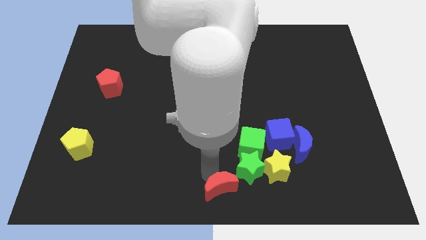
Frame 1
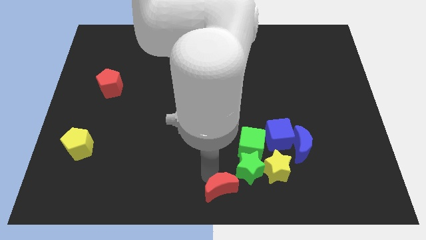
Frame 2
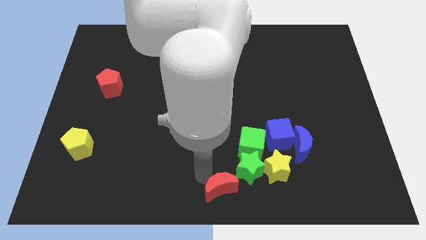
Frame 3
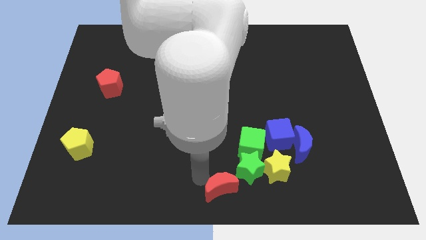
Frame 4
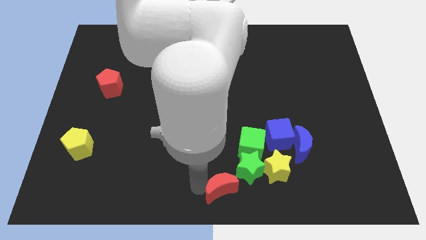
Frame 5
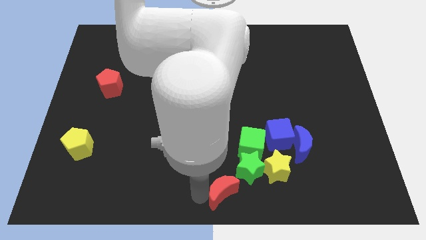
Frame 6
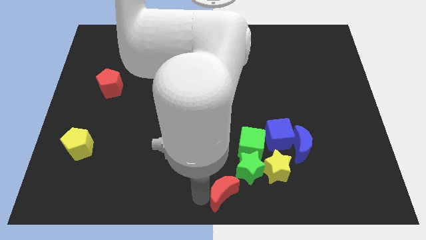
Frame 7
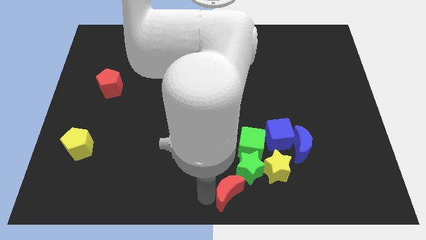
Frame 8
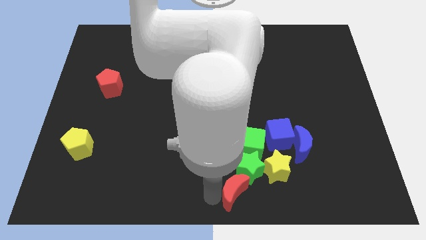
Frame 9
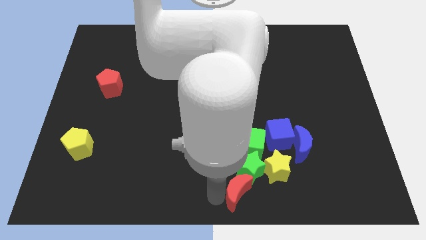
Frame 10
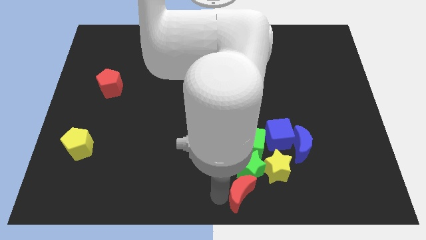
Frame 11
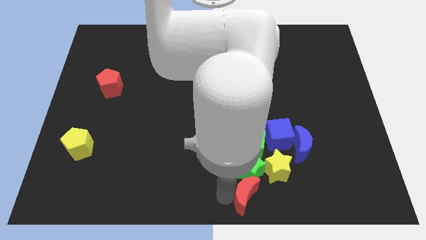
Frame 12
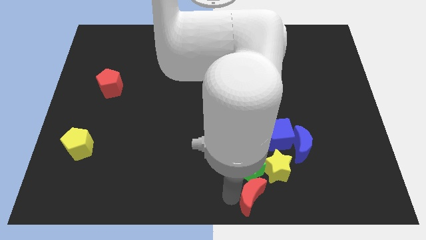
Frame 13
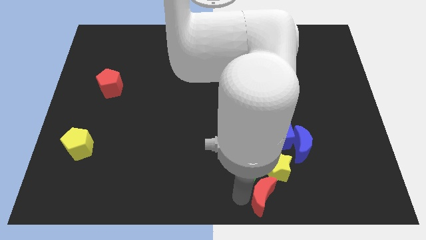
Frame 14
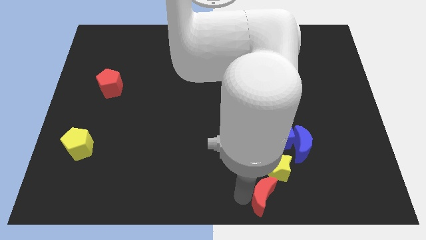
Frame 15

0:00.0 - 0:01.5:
push the red moon down to the yellow star

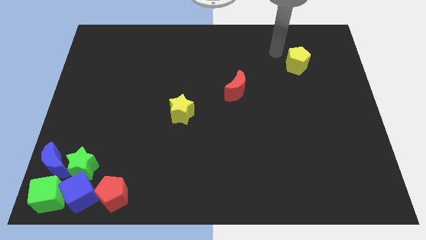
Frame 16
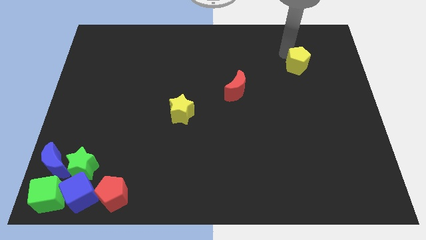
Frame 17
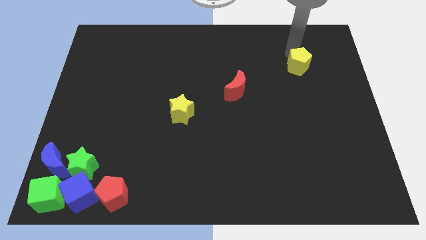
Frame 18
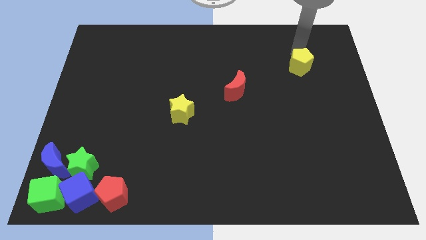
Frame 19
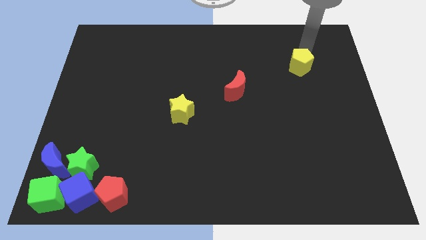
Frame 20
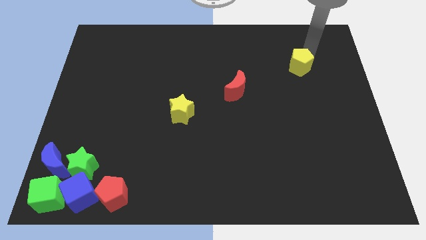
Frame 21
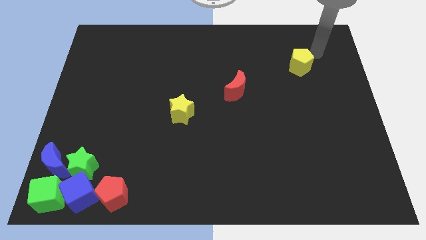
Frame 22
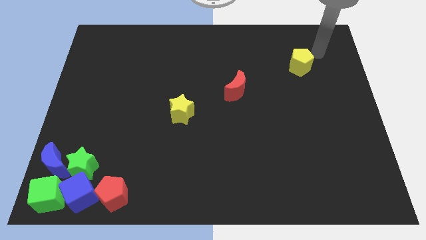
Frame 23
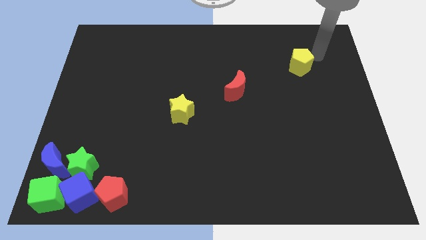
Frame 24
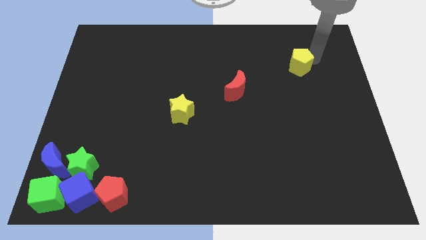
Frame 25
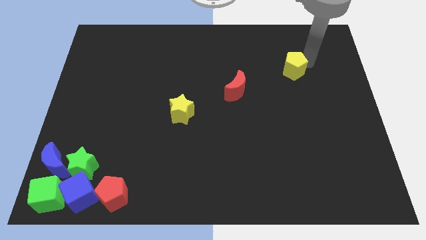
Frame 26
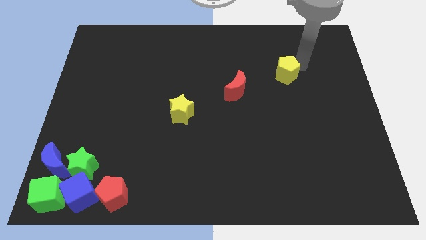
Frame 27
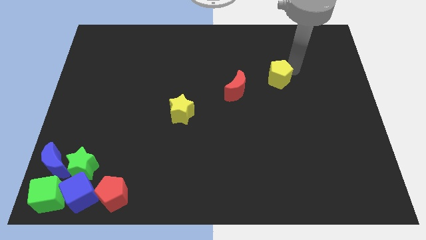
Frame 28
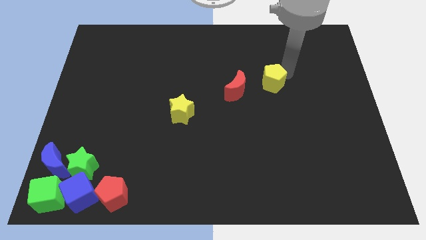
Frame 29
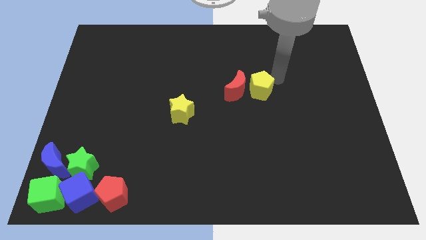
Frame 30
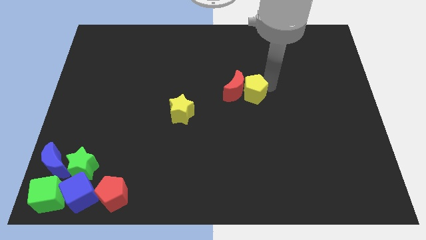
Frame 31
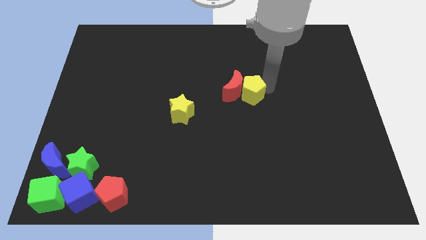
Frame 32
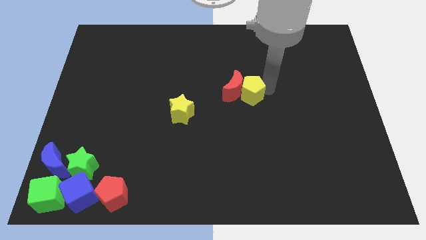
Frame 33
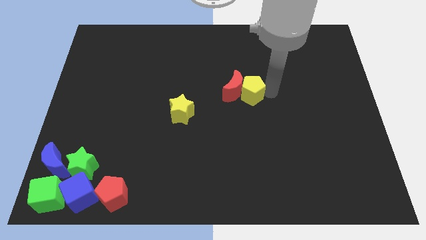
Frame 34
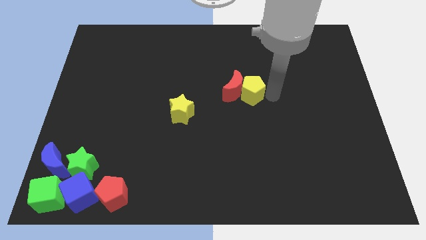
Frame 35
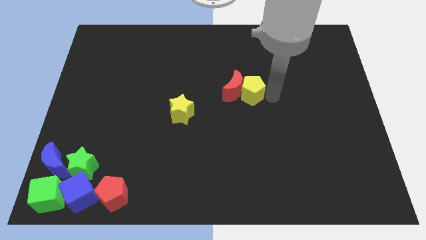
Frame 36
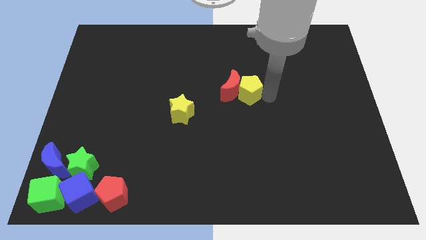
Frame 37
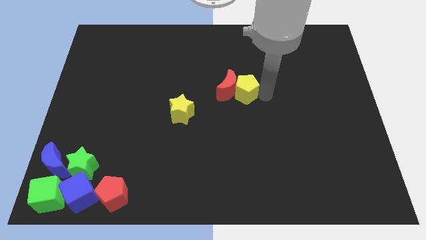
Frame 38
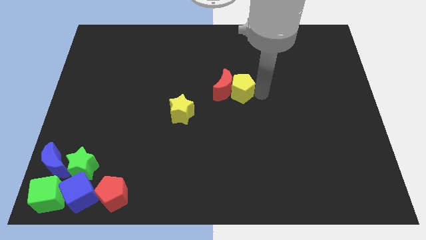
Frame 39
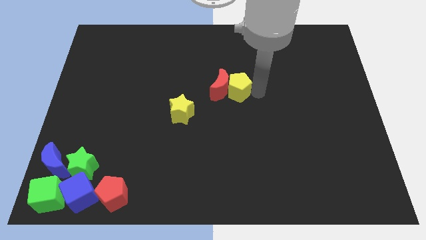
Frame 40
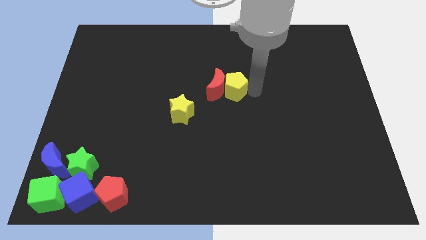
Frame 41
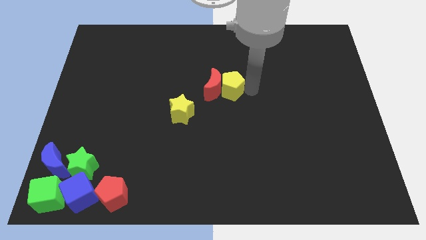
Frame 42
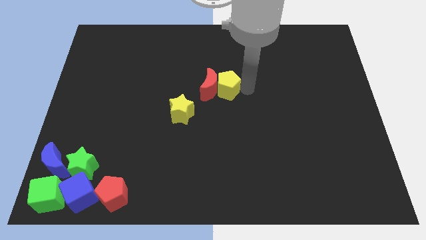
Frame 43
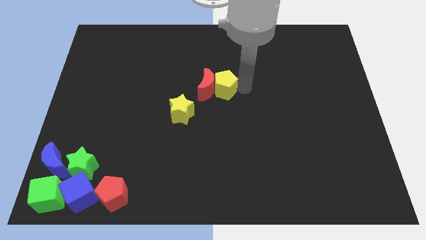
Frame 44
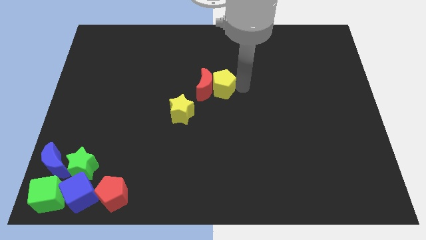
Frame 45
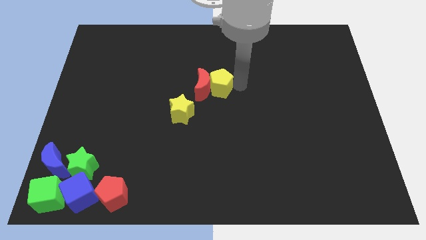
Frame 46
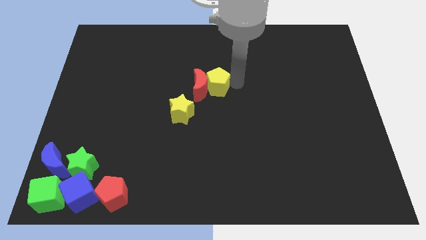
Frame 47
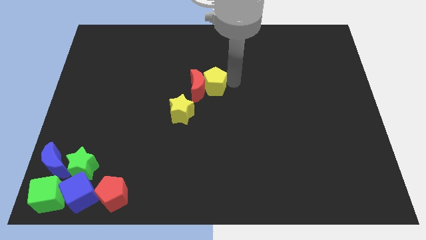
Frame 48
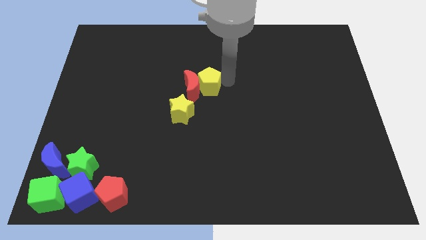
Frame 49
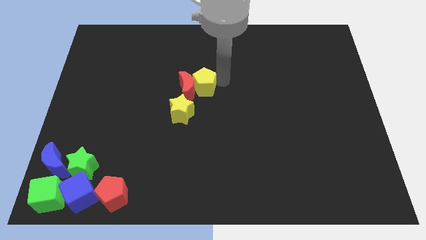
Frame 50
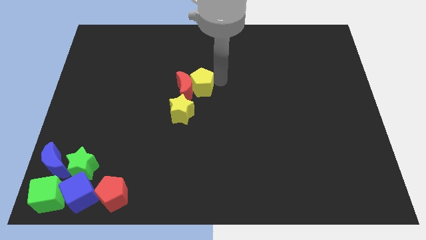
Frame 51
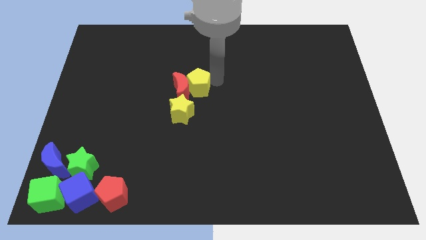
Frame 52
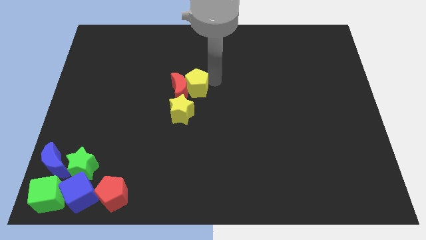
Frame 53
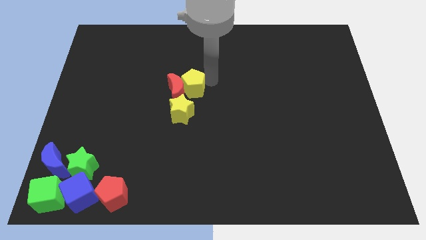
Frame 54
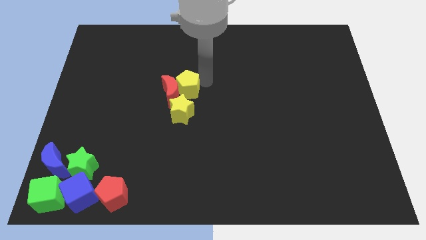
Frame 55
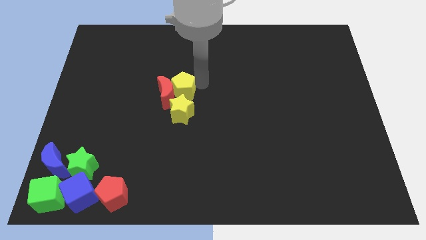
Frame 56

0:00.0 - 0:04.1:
slide the yellow pentagon into the red moon

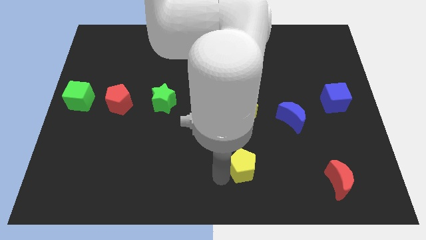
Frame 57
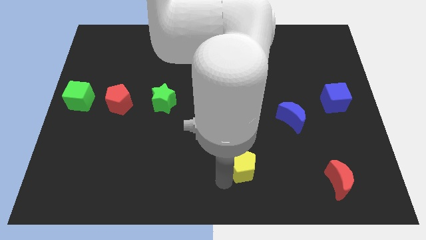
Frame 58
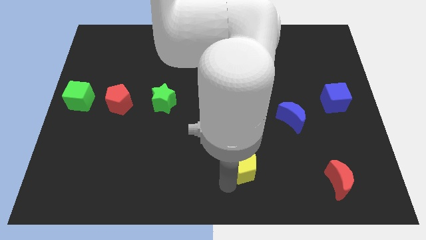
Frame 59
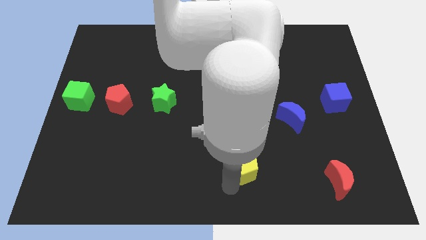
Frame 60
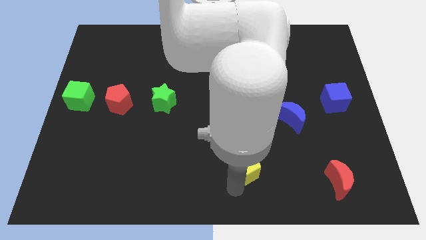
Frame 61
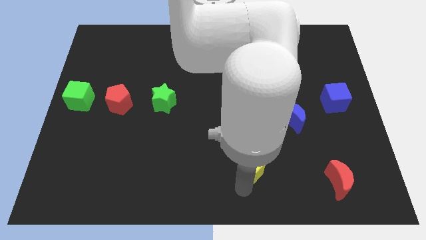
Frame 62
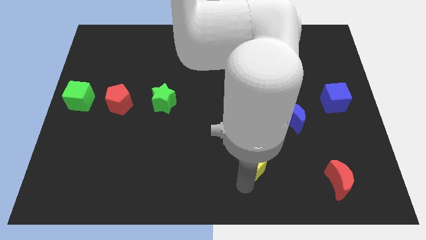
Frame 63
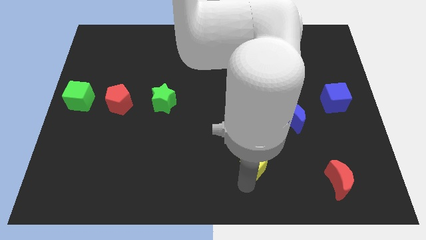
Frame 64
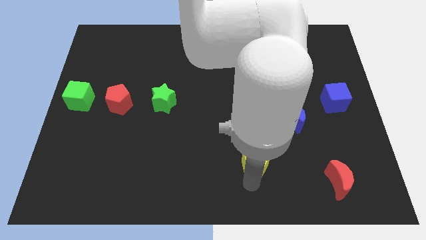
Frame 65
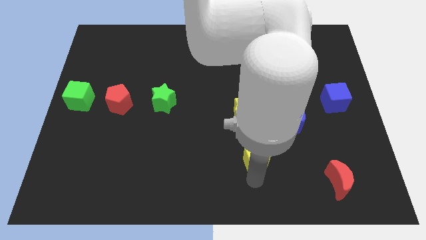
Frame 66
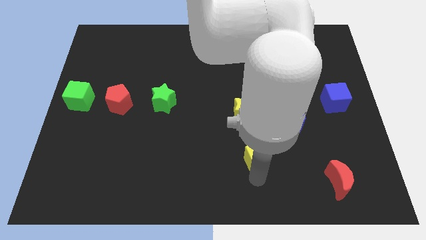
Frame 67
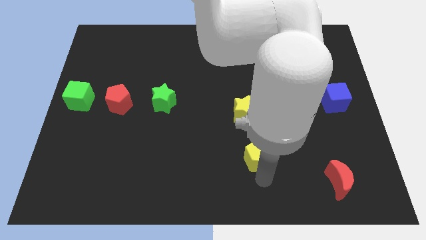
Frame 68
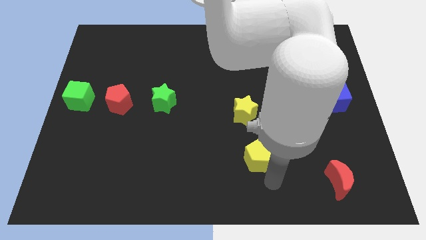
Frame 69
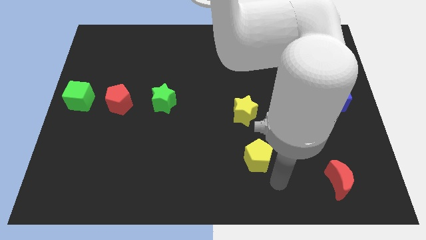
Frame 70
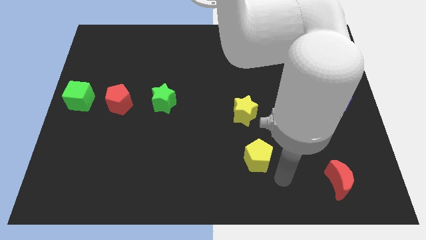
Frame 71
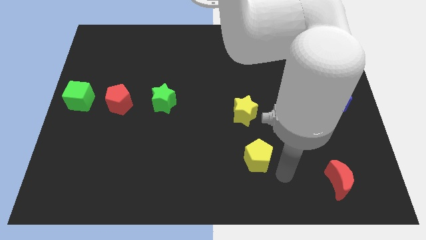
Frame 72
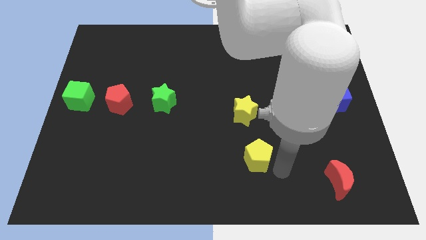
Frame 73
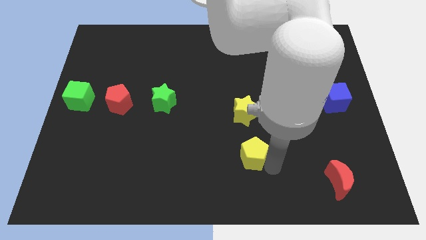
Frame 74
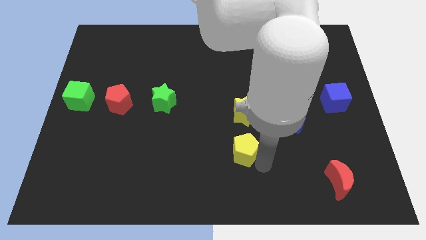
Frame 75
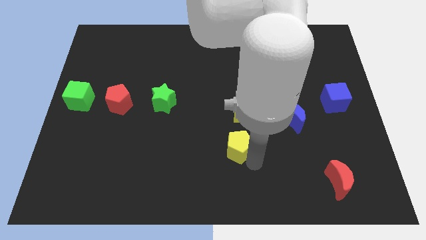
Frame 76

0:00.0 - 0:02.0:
move the yellow pentagon horizontally below to the yellow star

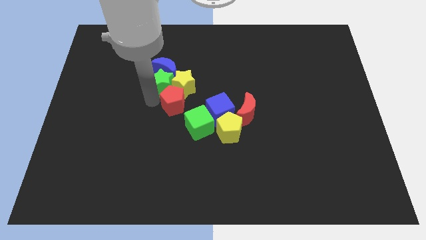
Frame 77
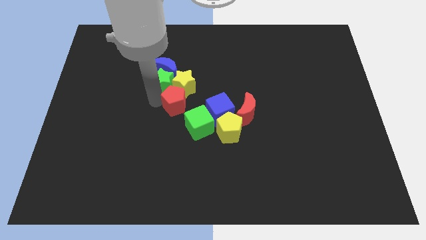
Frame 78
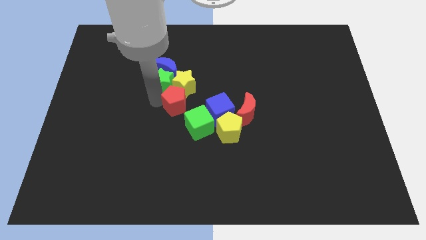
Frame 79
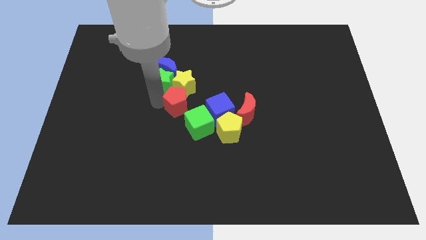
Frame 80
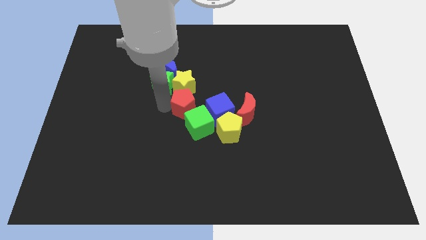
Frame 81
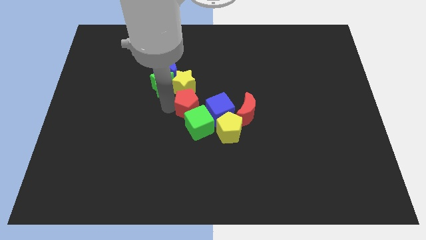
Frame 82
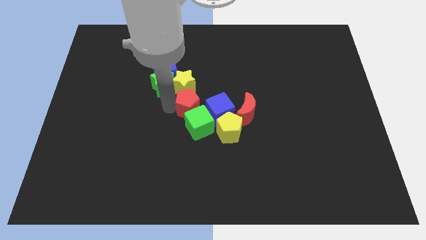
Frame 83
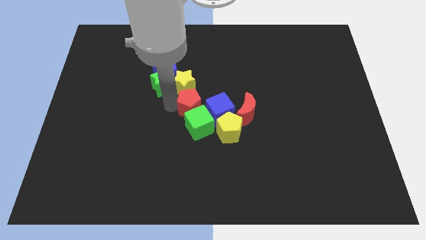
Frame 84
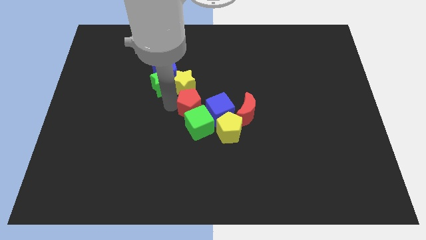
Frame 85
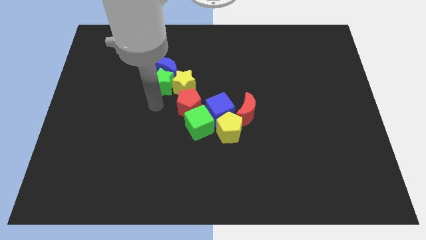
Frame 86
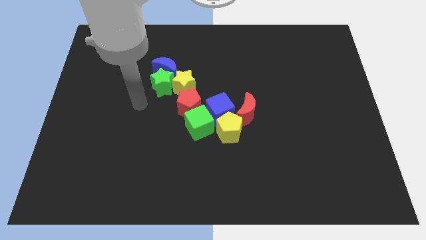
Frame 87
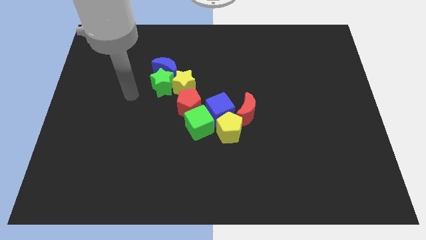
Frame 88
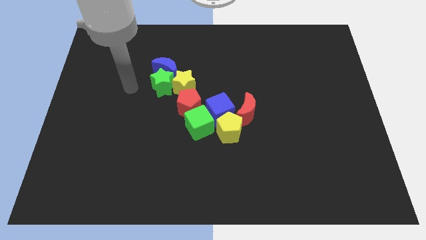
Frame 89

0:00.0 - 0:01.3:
place the red pentagon in between the yellow star and green cube

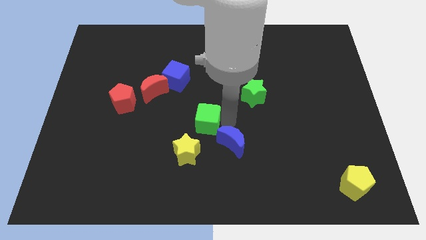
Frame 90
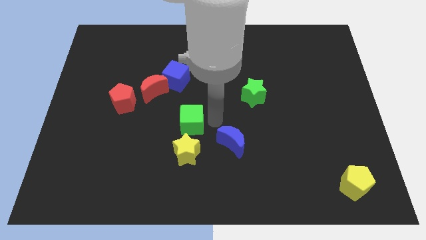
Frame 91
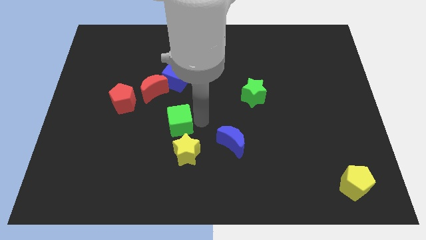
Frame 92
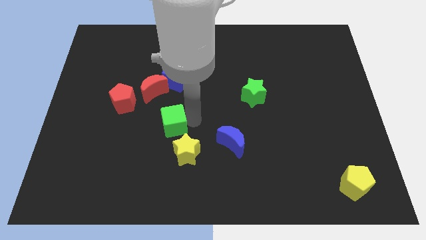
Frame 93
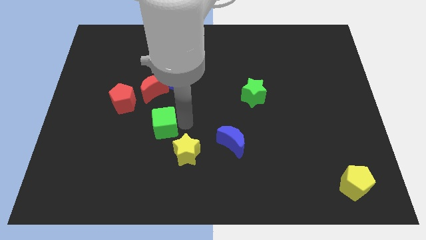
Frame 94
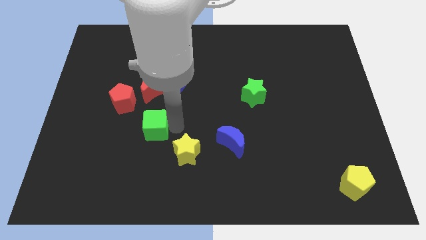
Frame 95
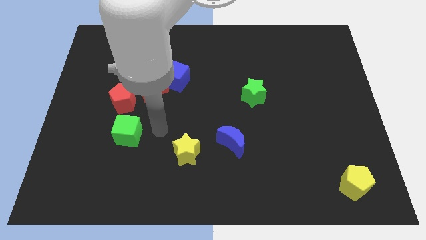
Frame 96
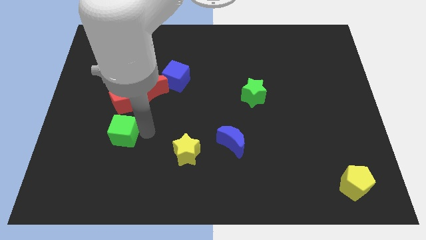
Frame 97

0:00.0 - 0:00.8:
place green cube to the bottom of red pentagon
